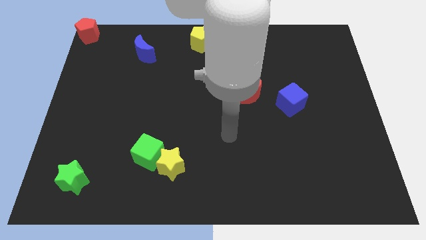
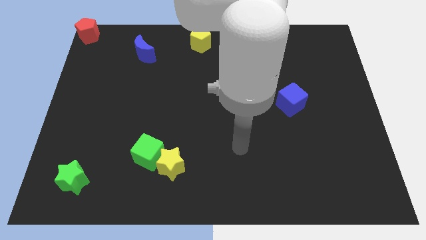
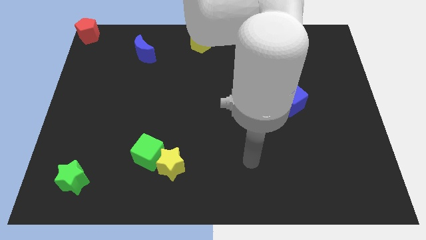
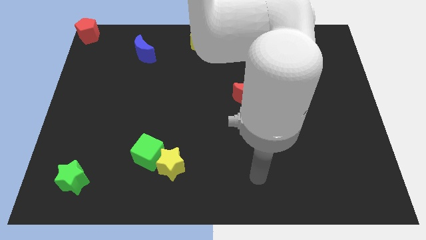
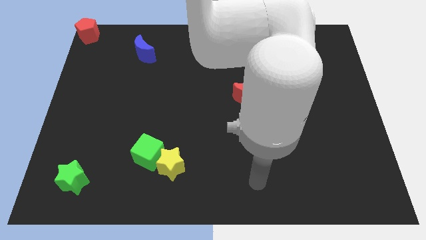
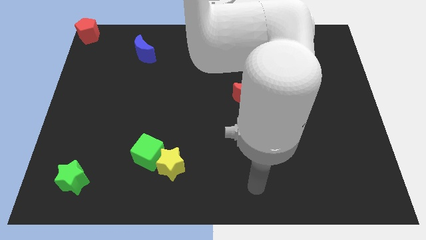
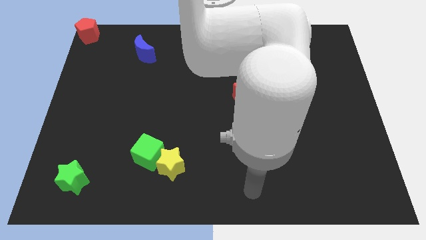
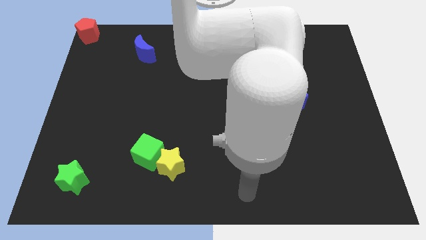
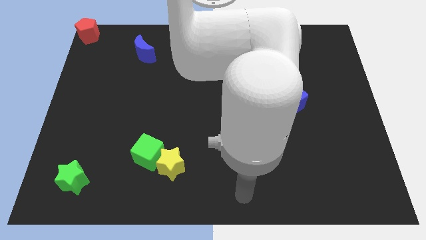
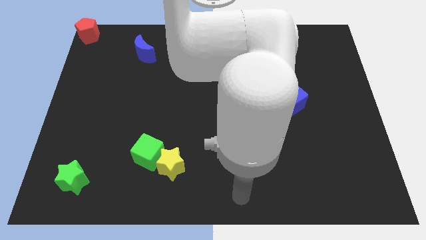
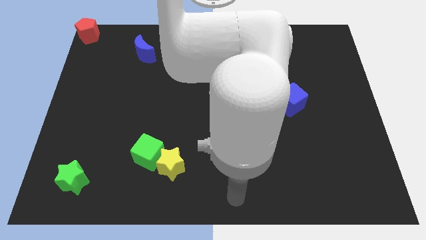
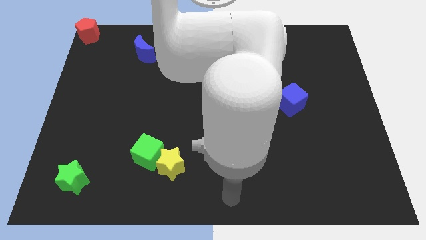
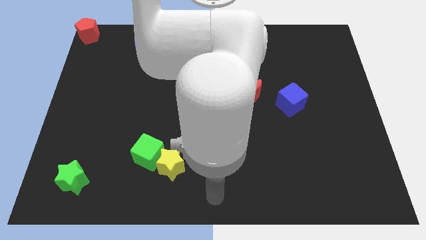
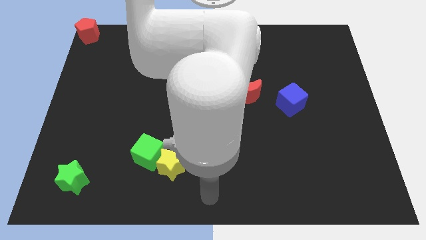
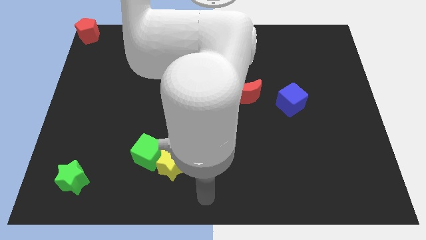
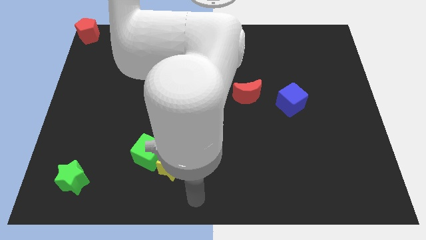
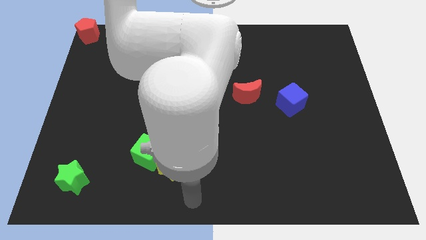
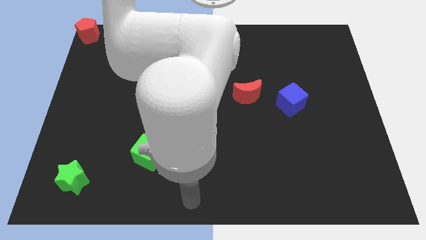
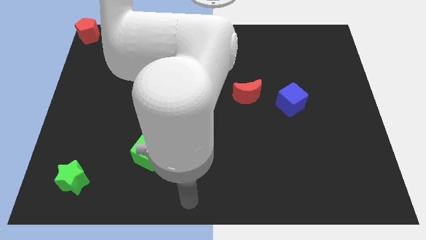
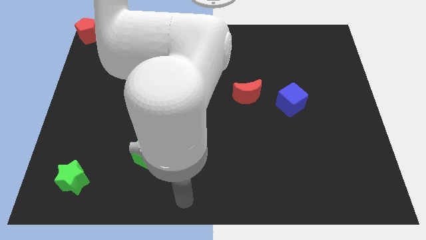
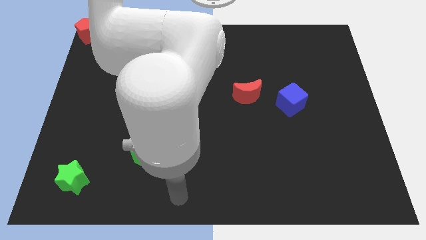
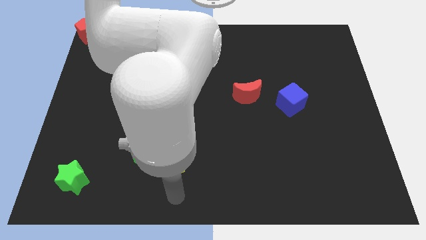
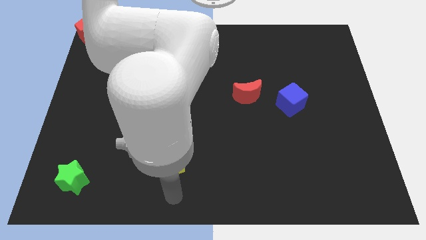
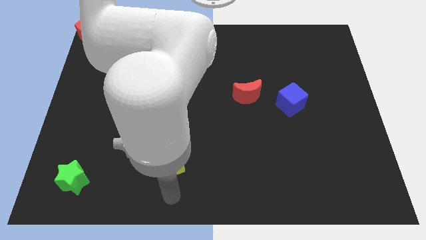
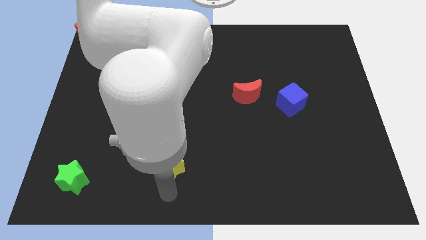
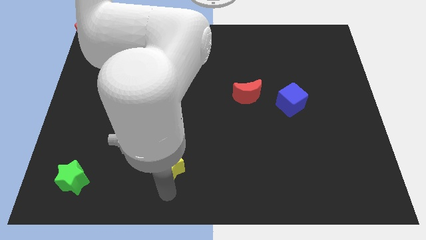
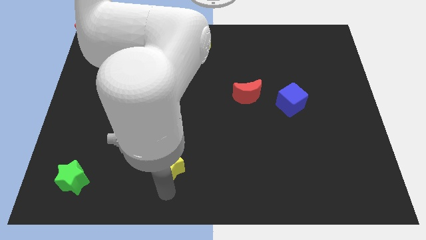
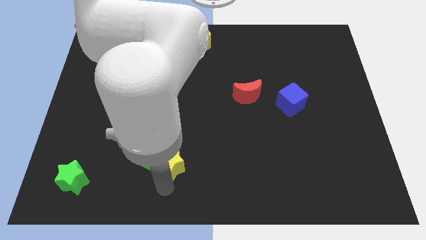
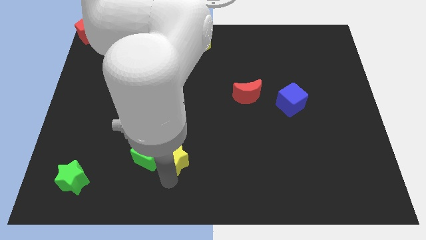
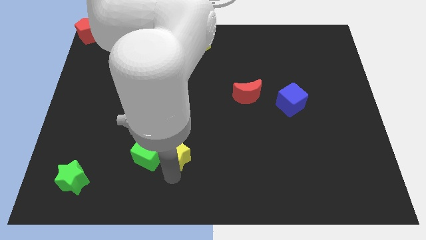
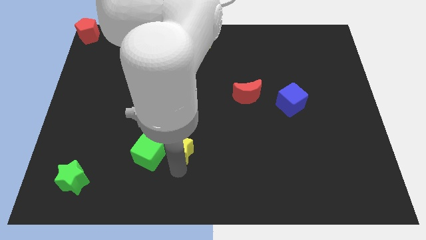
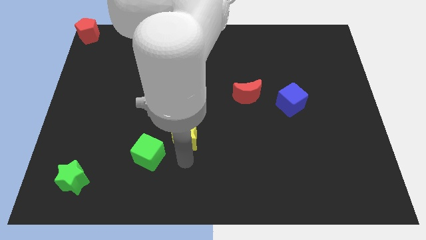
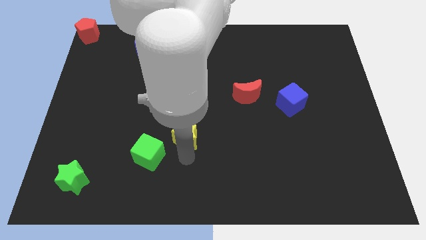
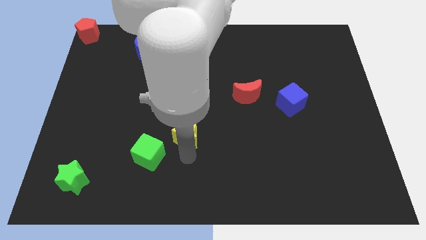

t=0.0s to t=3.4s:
separate yellow star from the green cube

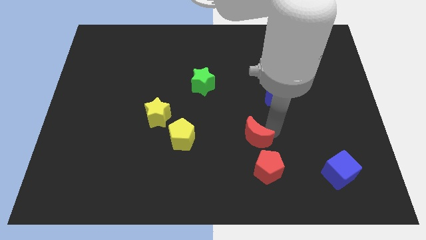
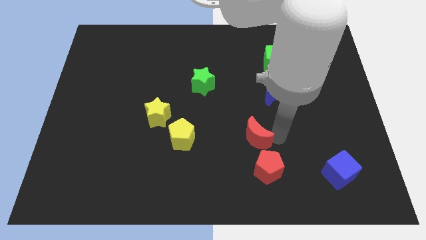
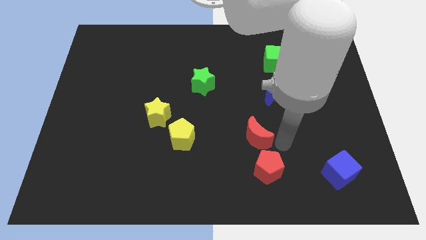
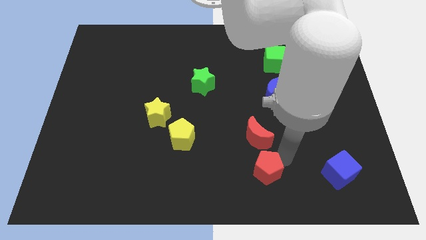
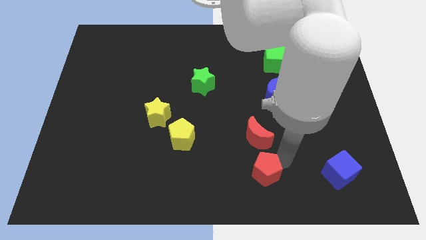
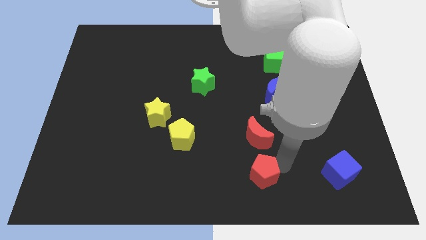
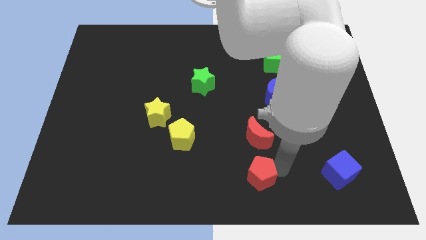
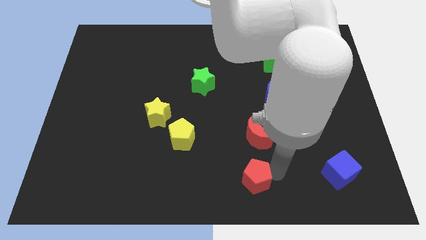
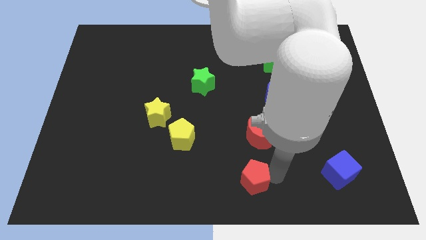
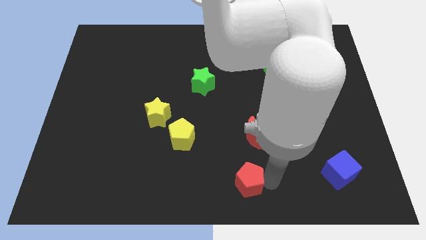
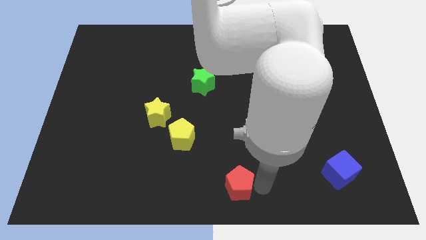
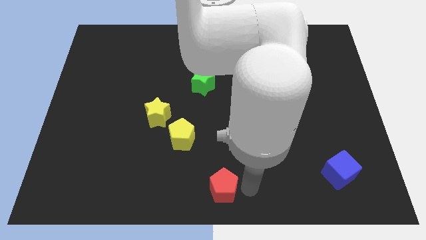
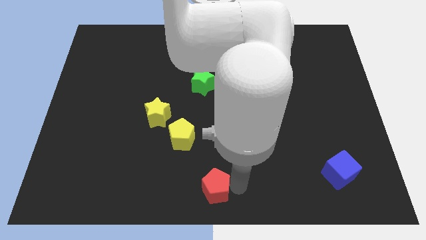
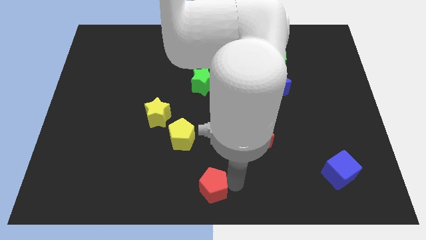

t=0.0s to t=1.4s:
separate red moon and red pentagon

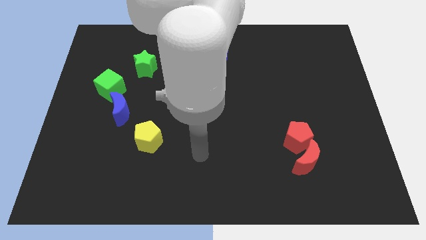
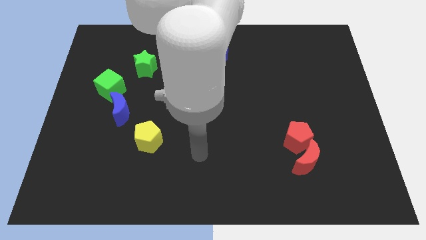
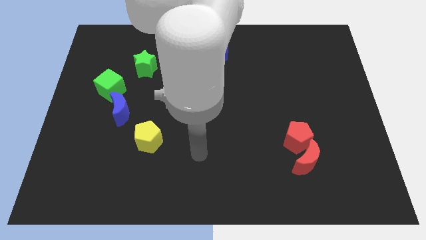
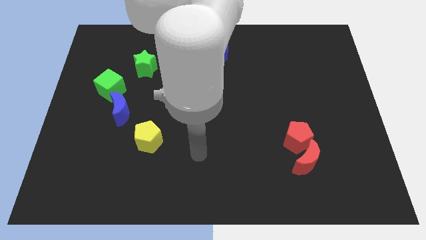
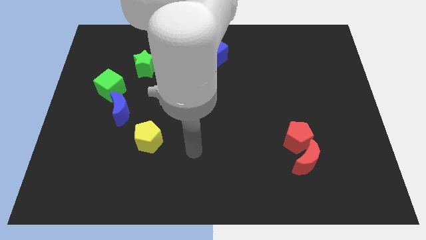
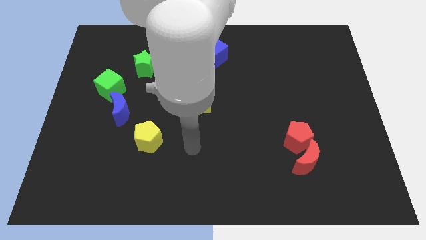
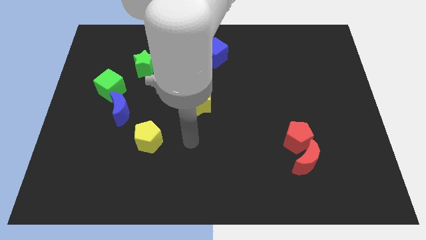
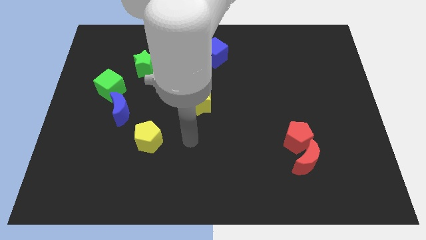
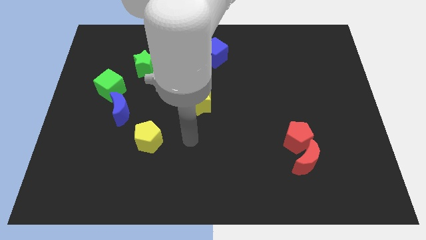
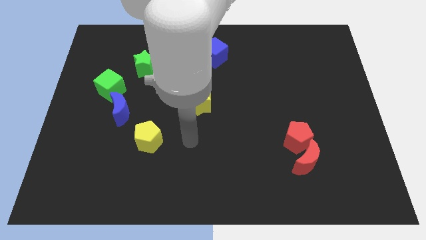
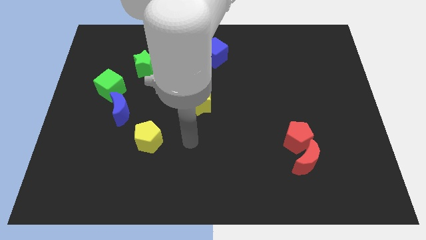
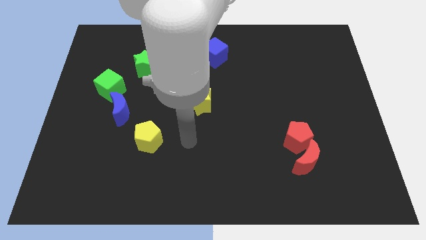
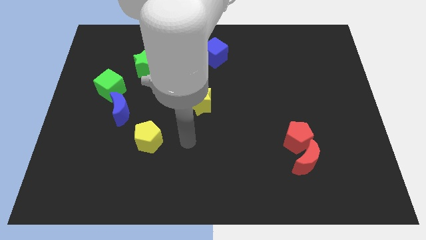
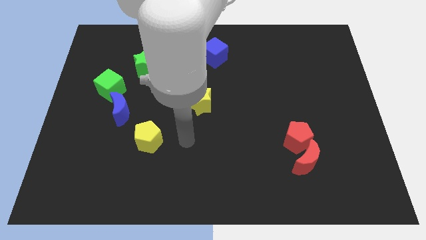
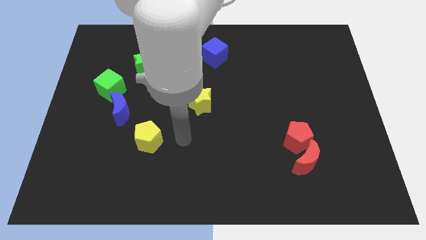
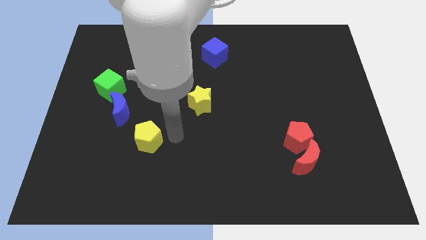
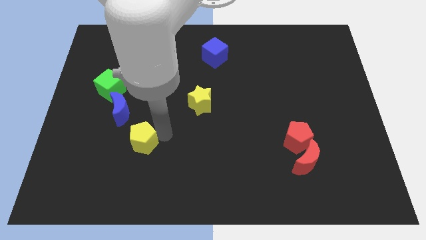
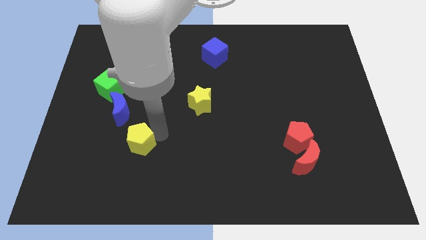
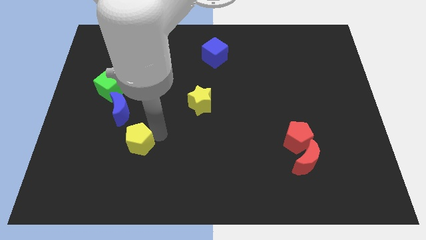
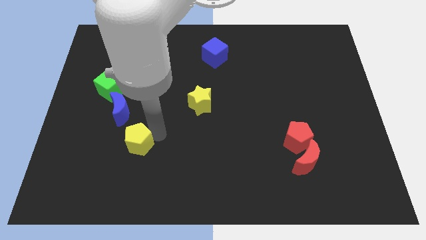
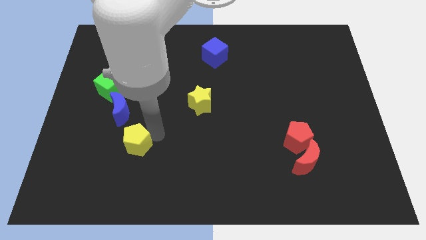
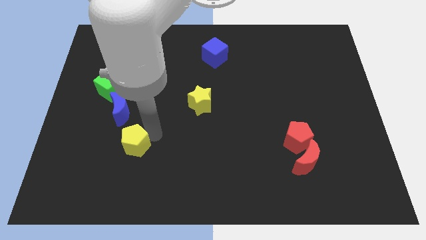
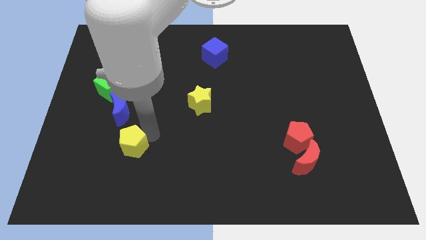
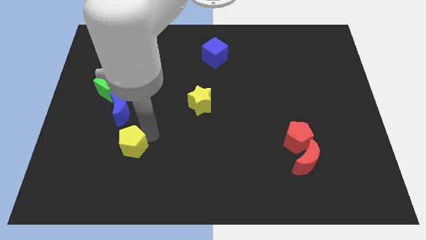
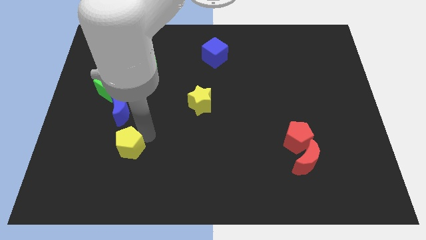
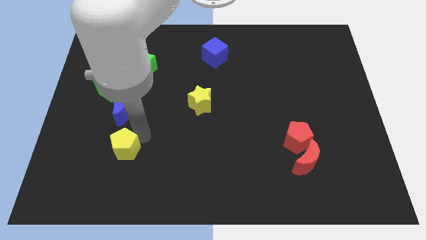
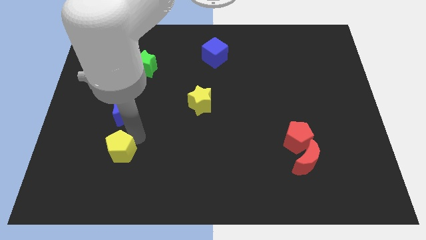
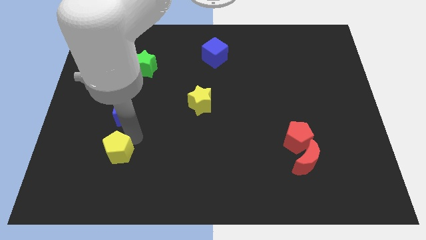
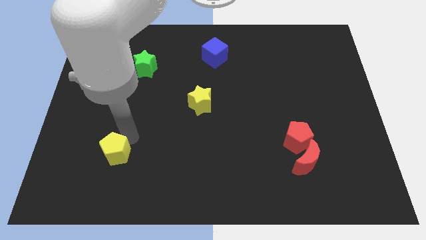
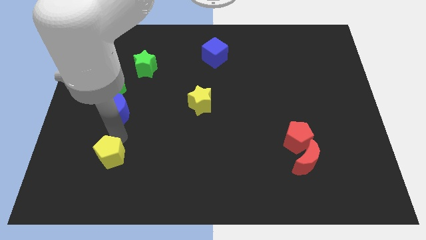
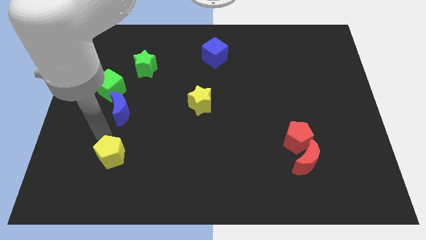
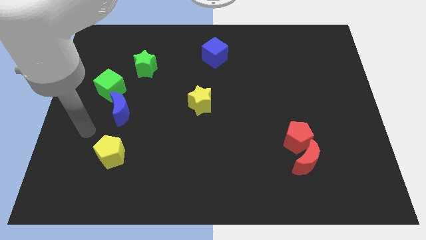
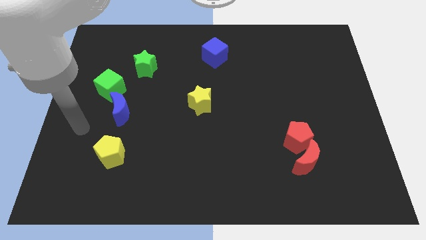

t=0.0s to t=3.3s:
push the yellow pentagon below the blue moon

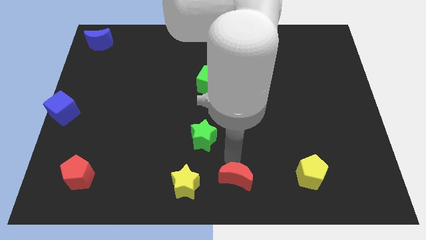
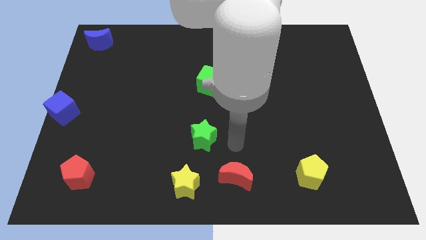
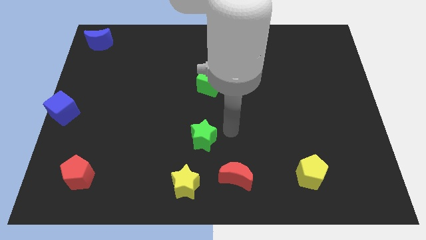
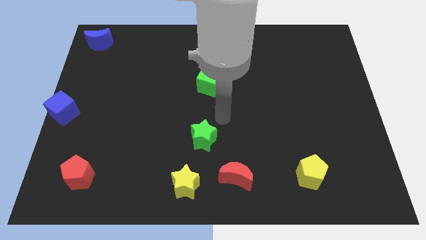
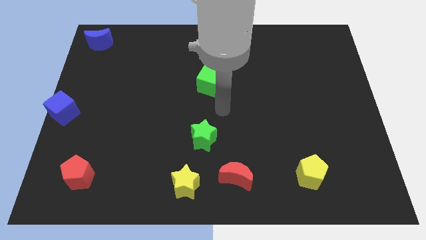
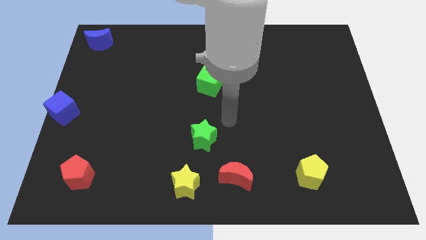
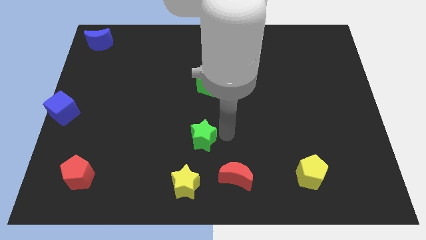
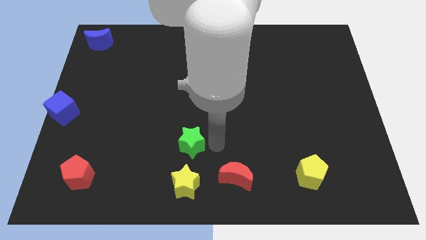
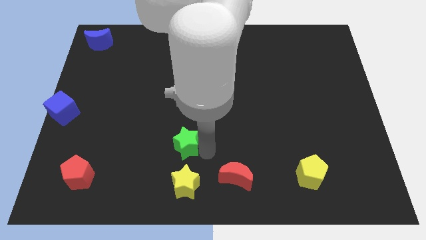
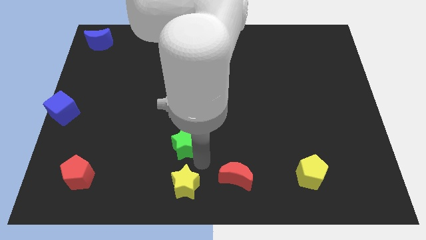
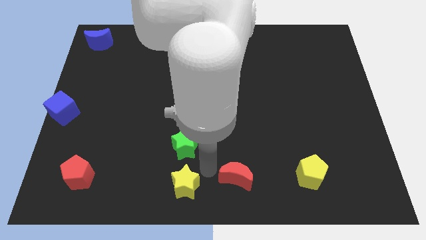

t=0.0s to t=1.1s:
place green star to the top of yellow star
